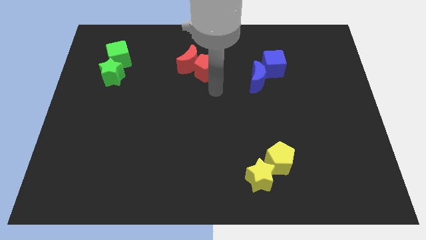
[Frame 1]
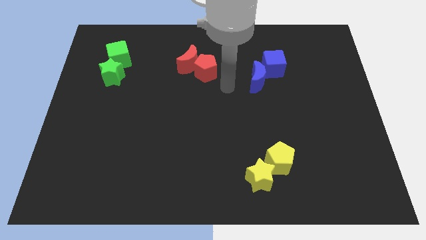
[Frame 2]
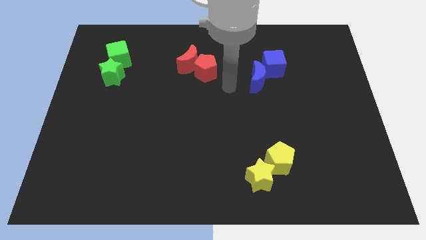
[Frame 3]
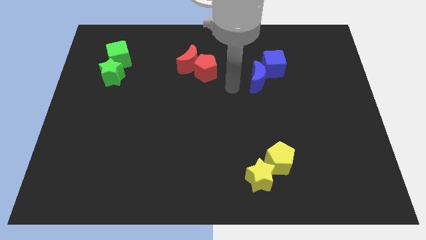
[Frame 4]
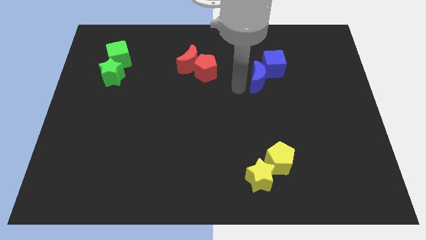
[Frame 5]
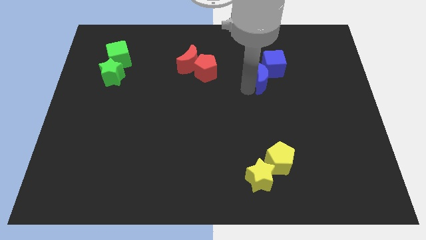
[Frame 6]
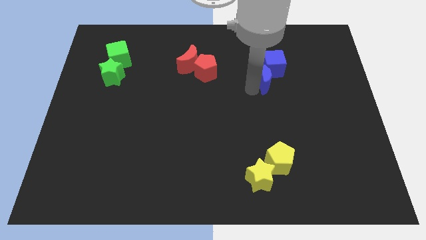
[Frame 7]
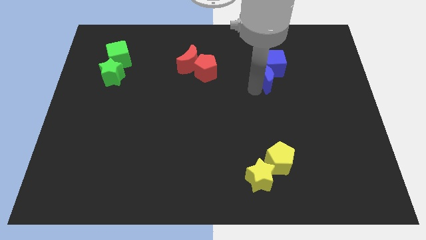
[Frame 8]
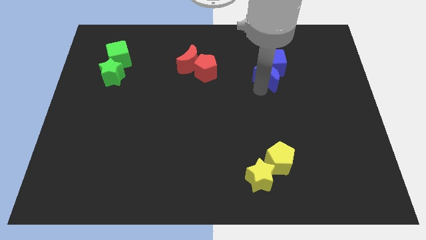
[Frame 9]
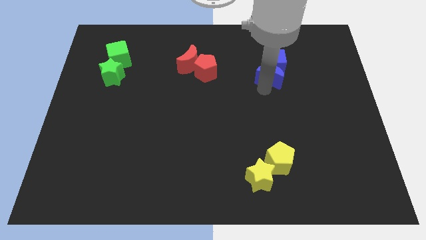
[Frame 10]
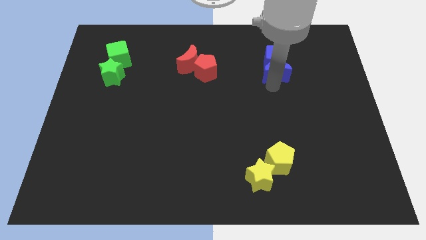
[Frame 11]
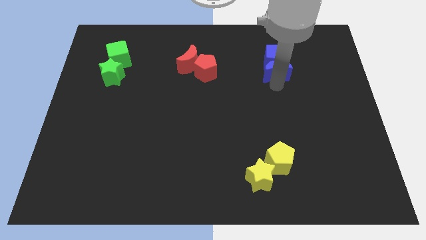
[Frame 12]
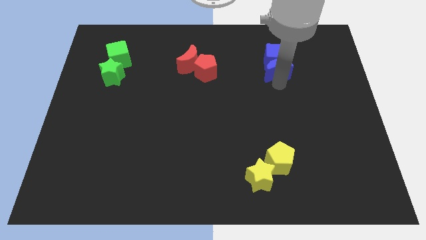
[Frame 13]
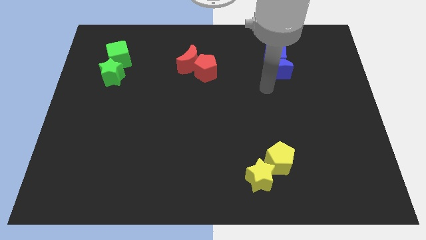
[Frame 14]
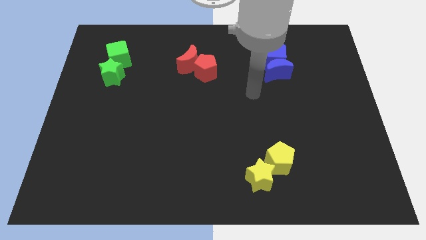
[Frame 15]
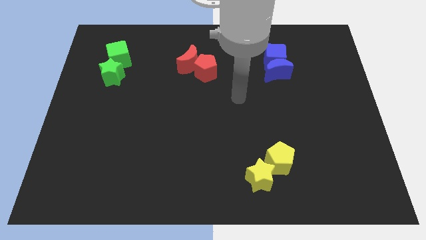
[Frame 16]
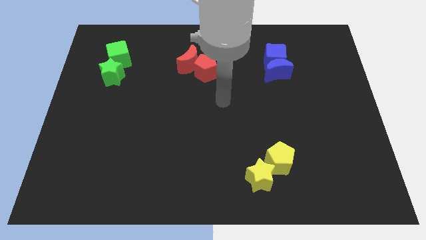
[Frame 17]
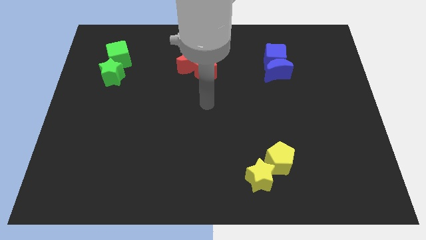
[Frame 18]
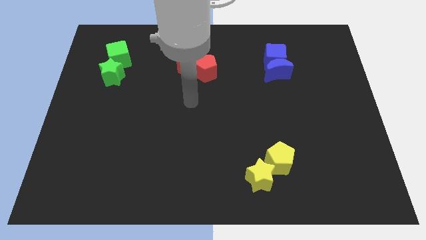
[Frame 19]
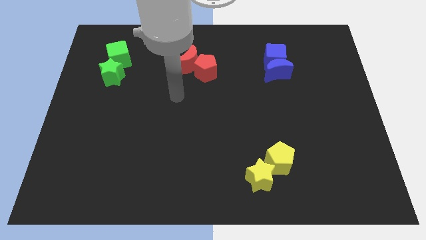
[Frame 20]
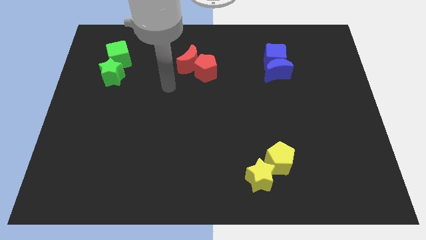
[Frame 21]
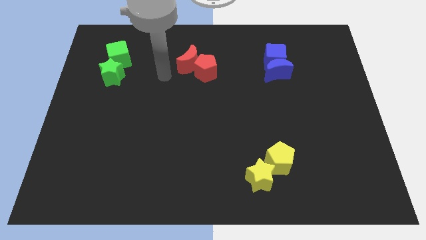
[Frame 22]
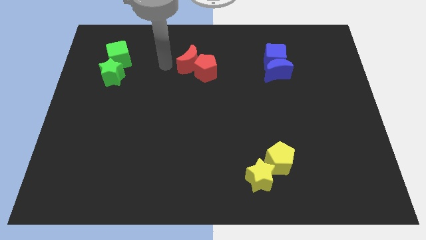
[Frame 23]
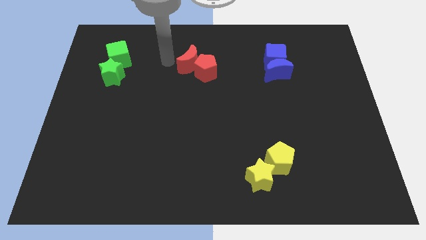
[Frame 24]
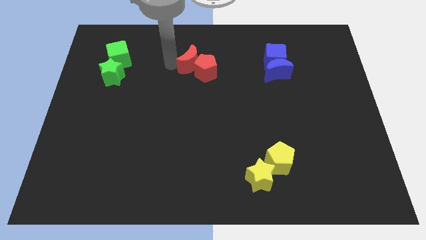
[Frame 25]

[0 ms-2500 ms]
push the blue crescent into the blue cube

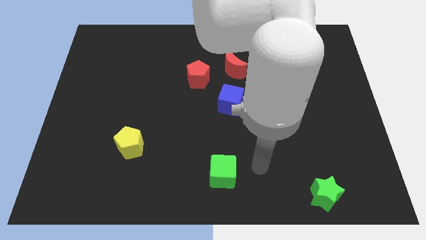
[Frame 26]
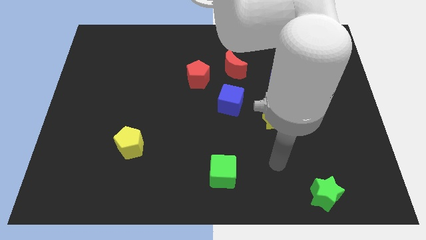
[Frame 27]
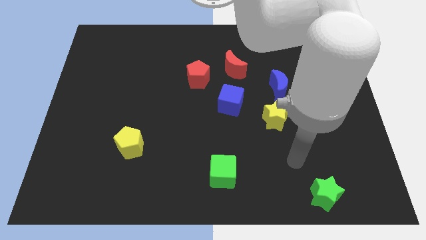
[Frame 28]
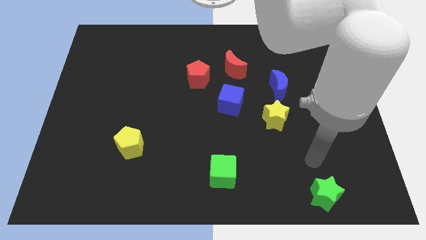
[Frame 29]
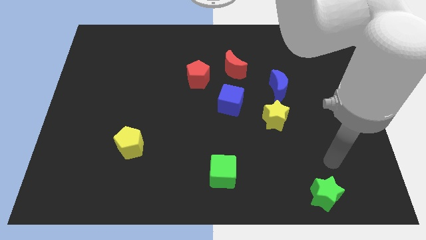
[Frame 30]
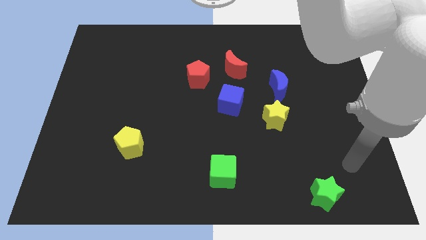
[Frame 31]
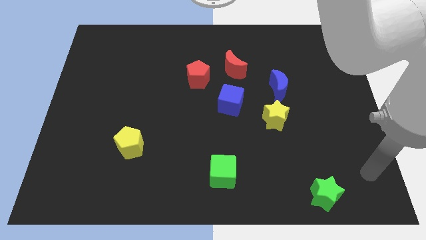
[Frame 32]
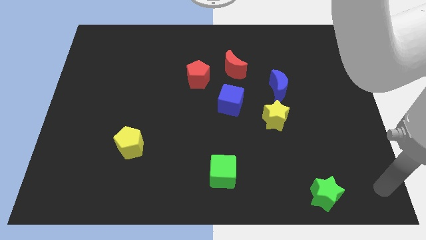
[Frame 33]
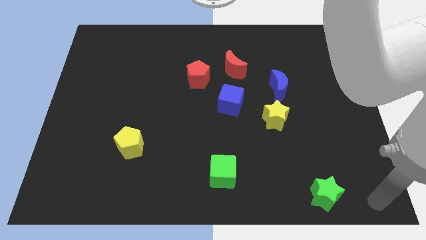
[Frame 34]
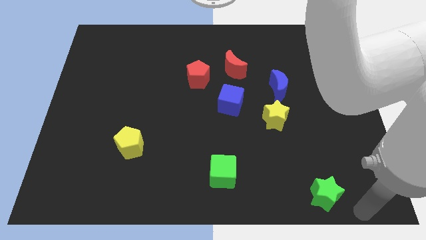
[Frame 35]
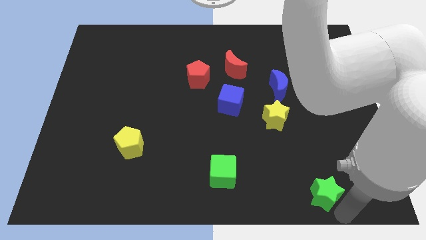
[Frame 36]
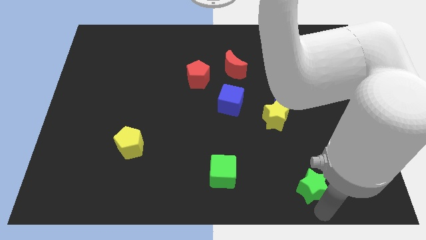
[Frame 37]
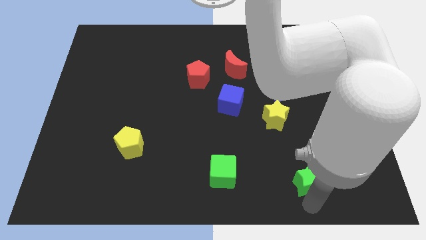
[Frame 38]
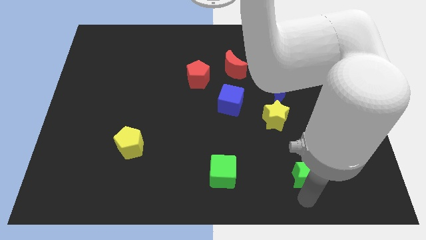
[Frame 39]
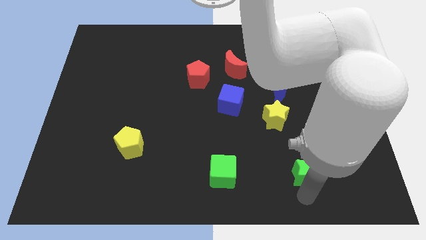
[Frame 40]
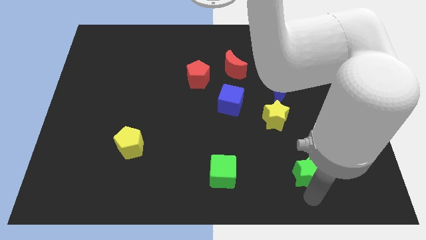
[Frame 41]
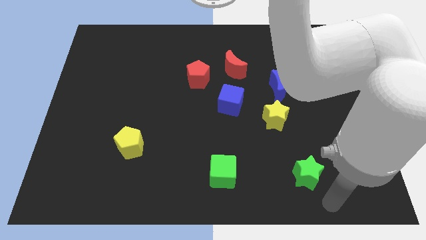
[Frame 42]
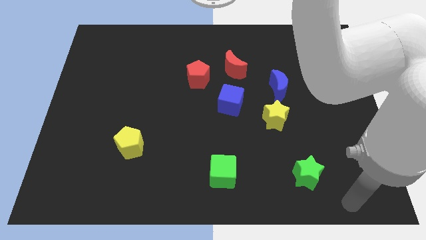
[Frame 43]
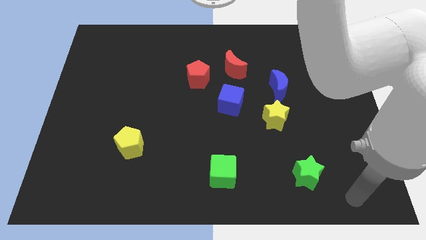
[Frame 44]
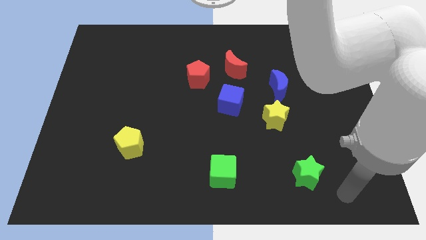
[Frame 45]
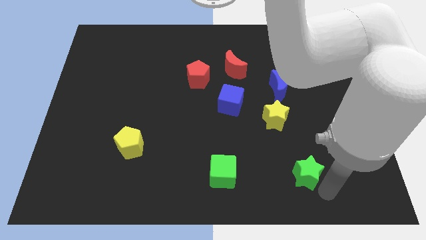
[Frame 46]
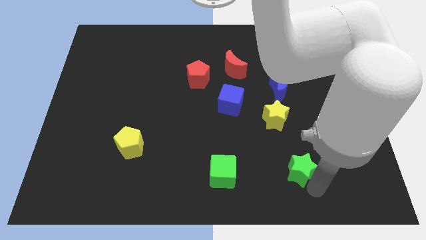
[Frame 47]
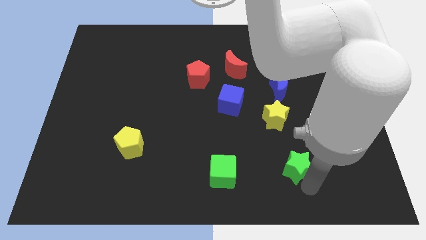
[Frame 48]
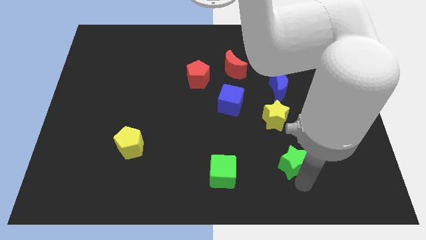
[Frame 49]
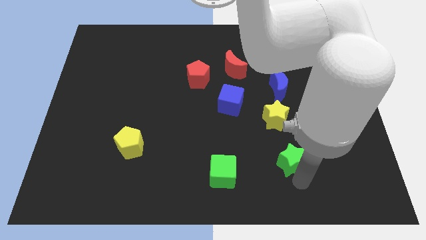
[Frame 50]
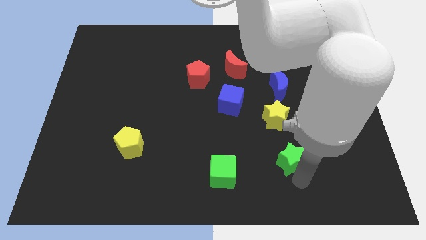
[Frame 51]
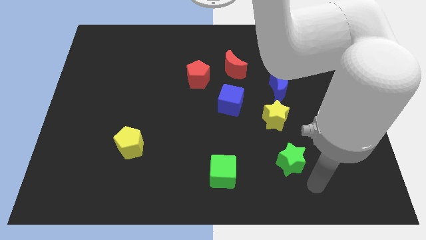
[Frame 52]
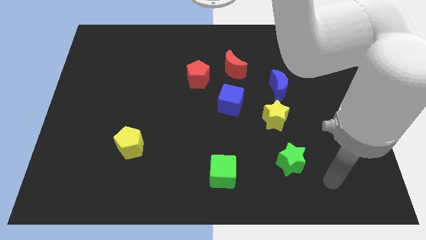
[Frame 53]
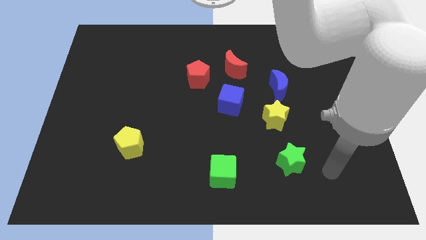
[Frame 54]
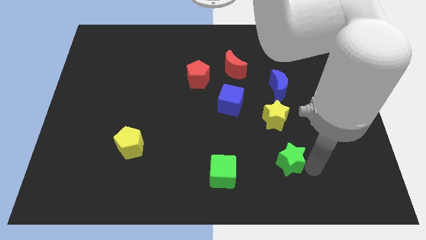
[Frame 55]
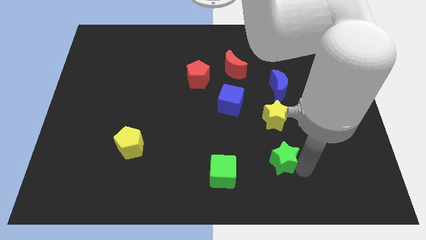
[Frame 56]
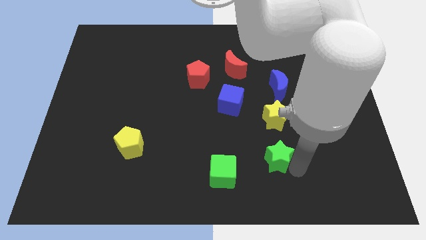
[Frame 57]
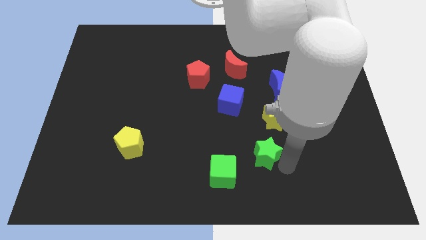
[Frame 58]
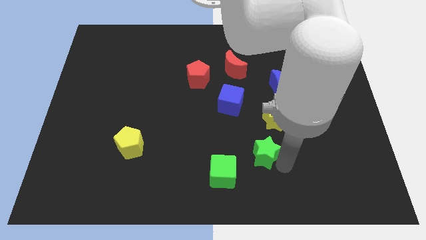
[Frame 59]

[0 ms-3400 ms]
move the green star below the yellow star

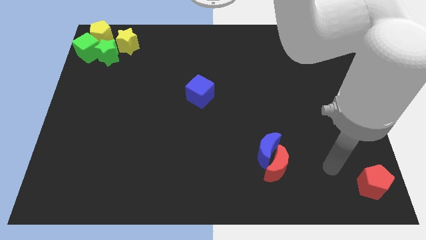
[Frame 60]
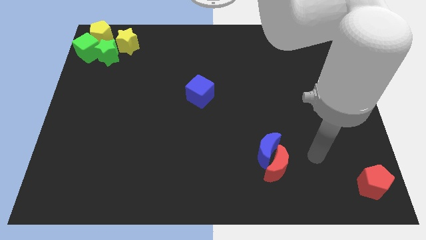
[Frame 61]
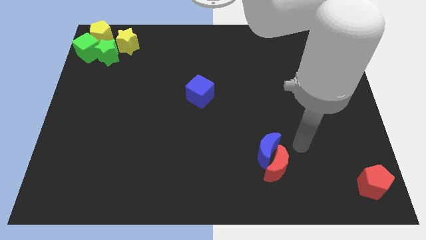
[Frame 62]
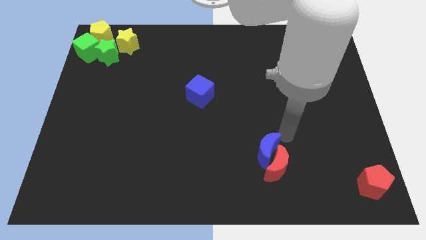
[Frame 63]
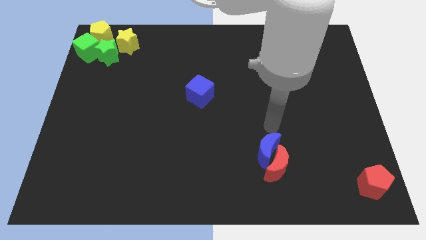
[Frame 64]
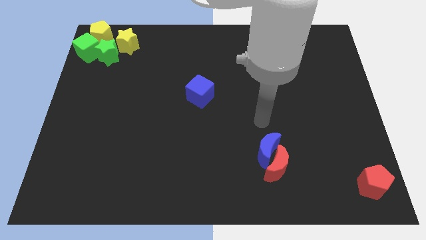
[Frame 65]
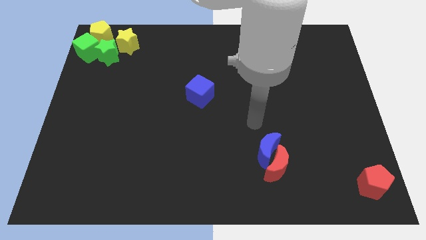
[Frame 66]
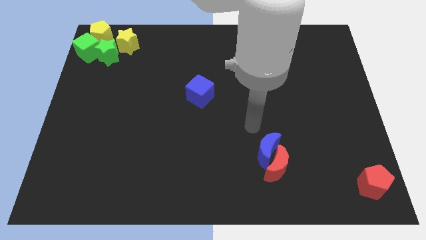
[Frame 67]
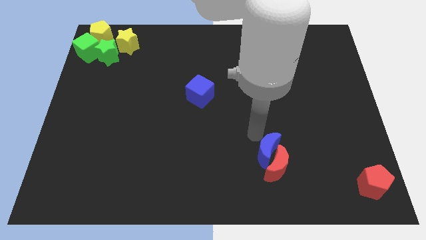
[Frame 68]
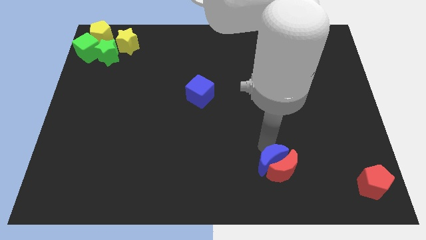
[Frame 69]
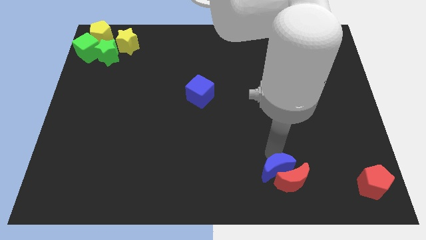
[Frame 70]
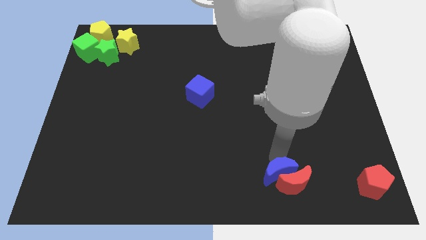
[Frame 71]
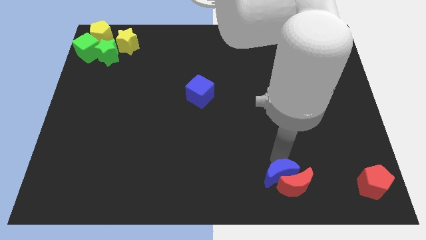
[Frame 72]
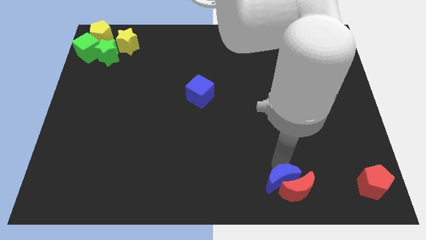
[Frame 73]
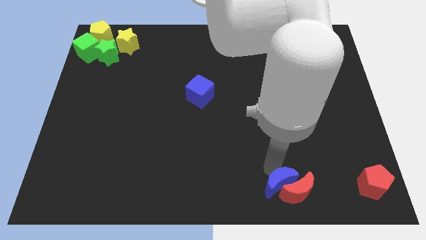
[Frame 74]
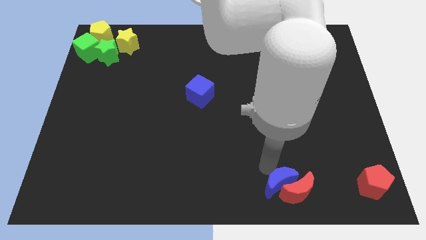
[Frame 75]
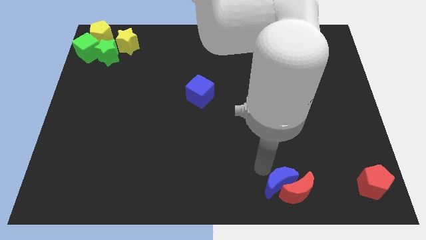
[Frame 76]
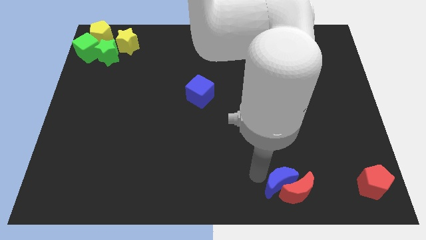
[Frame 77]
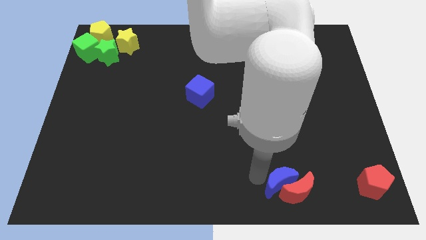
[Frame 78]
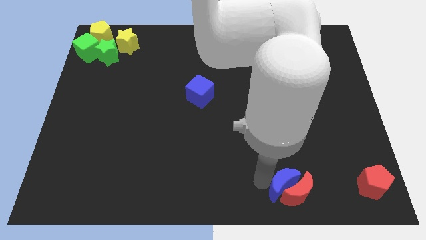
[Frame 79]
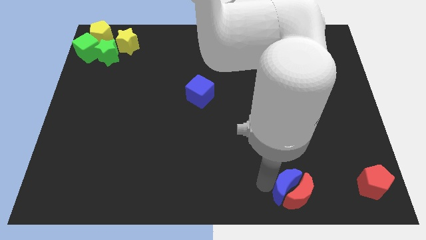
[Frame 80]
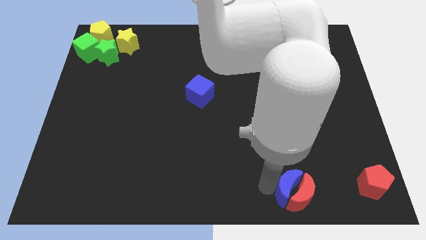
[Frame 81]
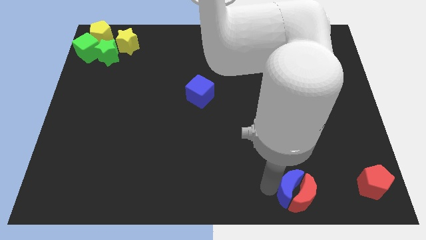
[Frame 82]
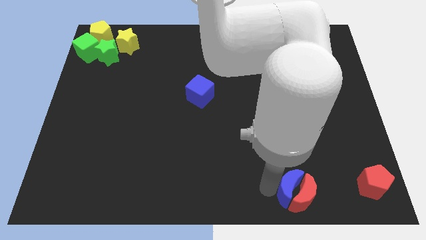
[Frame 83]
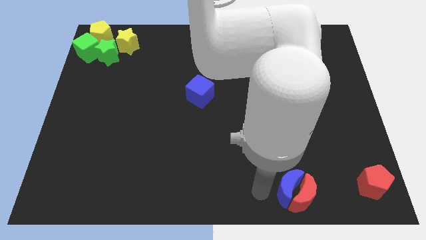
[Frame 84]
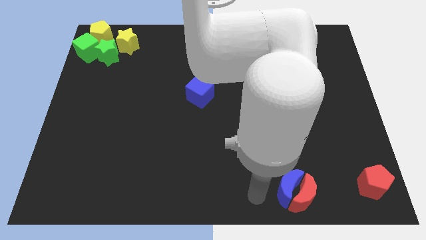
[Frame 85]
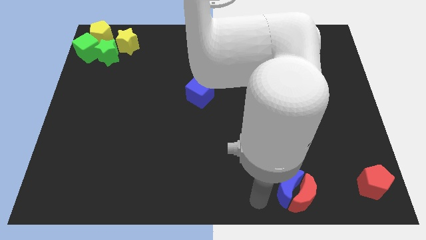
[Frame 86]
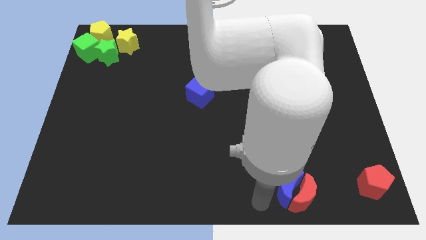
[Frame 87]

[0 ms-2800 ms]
push the blue and red moon to the left of red pentagon

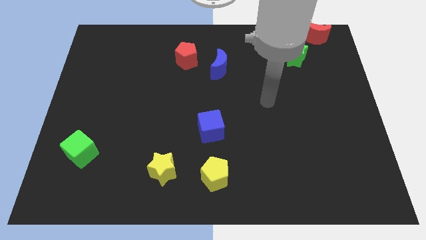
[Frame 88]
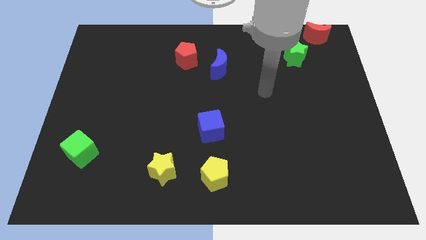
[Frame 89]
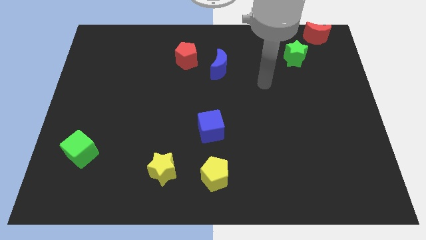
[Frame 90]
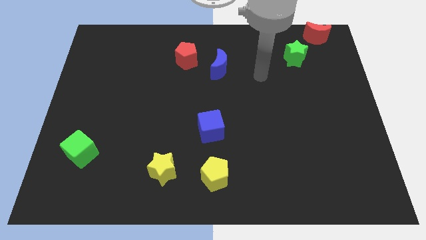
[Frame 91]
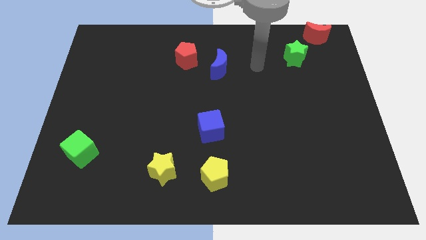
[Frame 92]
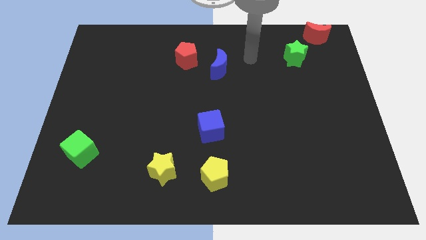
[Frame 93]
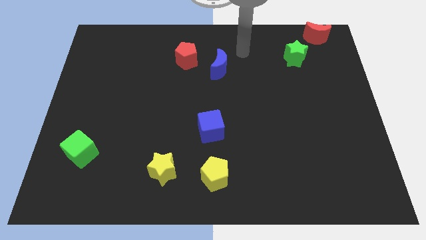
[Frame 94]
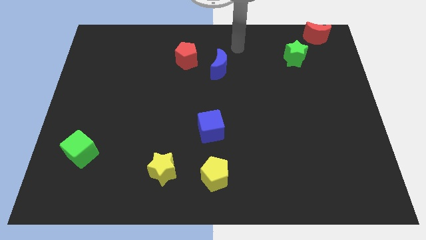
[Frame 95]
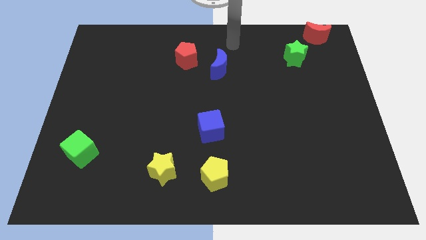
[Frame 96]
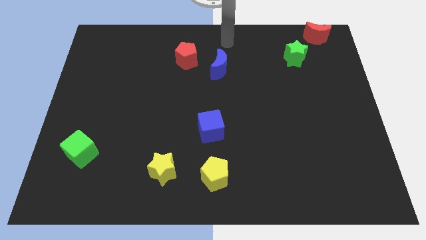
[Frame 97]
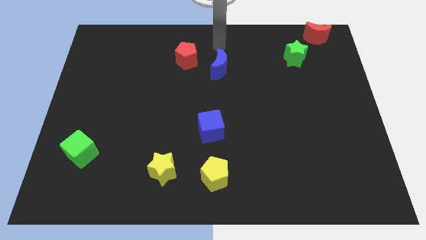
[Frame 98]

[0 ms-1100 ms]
place your hand on top of blue moon
